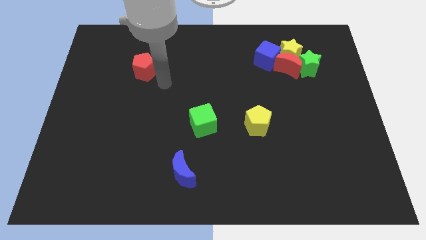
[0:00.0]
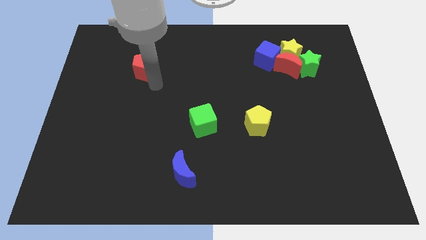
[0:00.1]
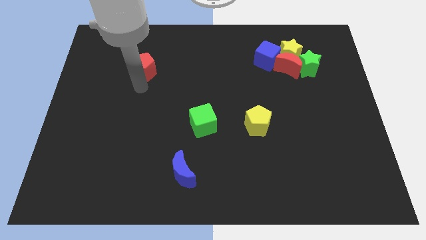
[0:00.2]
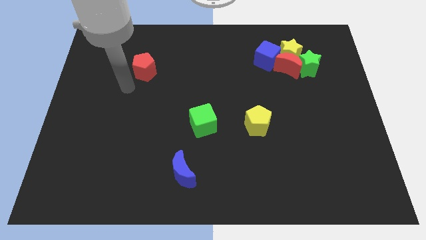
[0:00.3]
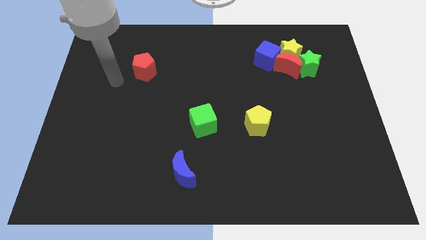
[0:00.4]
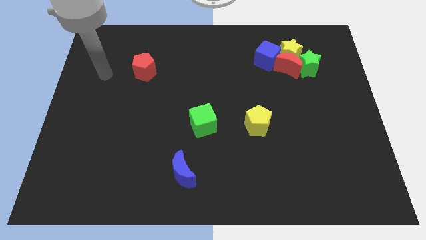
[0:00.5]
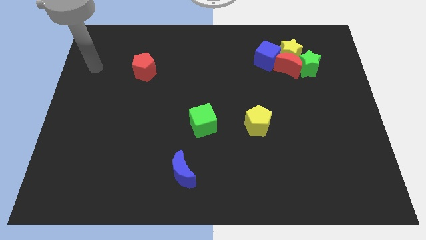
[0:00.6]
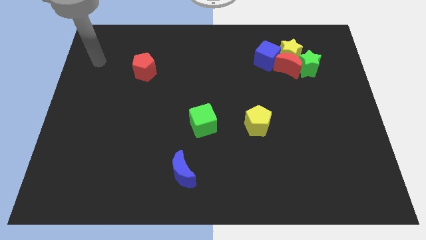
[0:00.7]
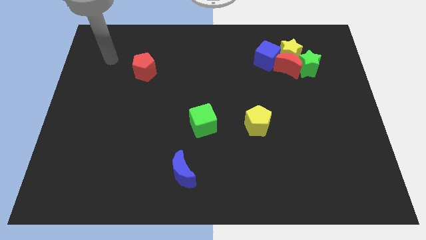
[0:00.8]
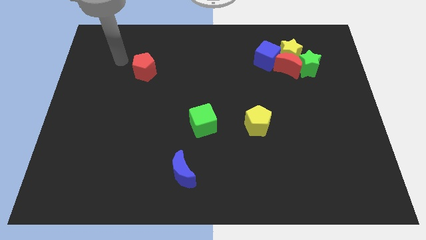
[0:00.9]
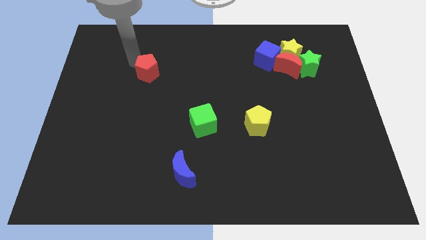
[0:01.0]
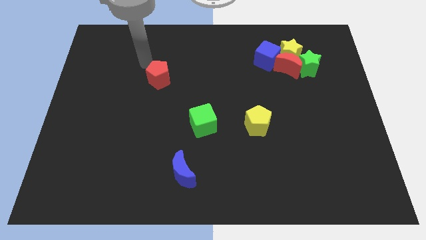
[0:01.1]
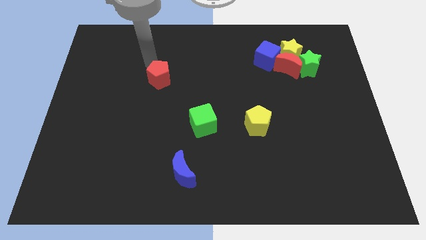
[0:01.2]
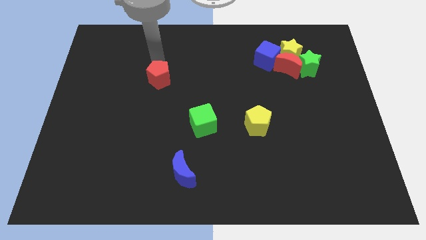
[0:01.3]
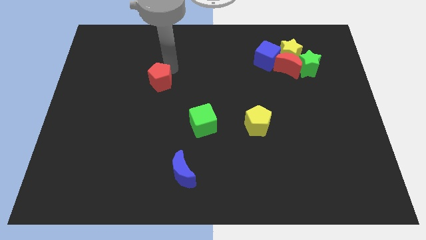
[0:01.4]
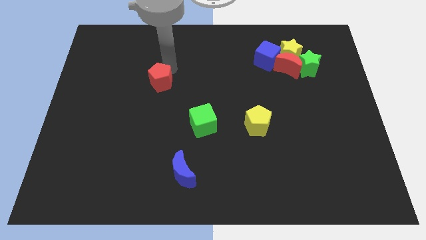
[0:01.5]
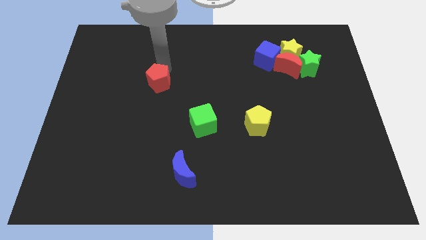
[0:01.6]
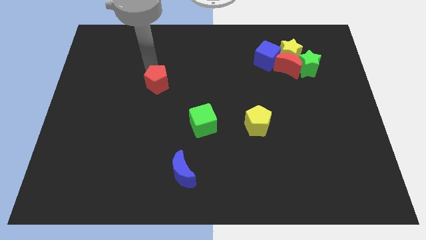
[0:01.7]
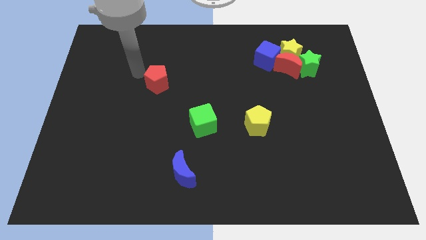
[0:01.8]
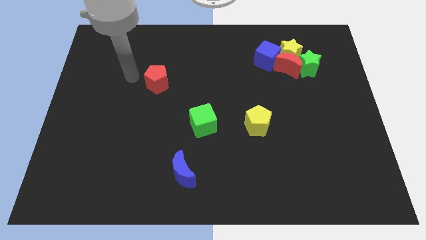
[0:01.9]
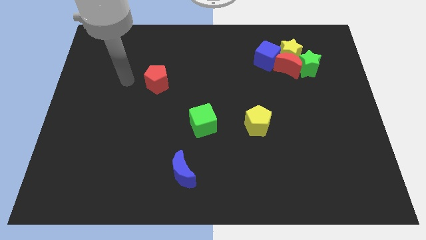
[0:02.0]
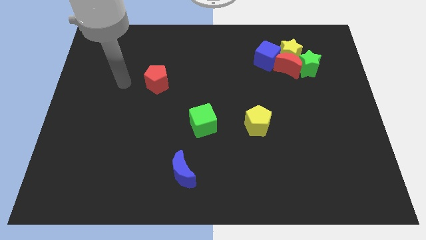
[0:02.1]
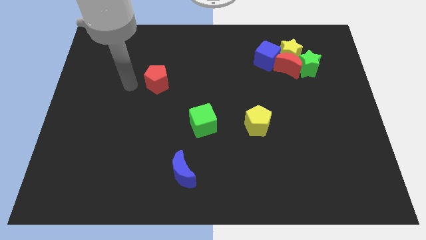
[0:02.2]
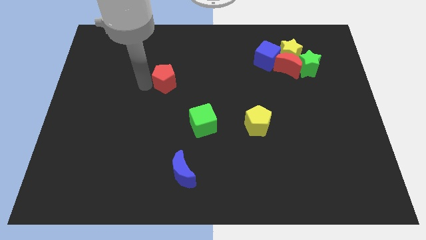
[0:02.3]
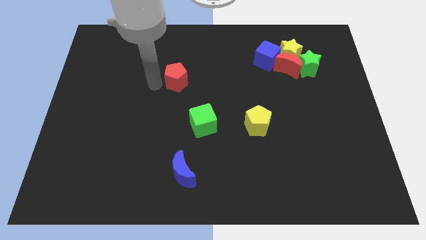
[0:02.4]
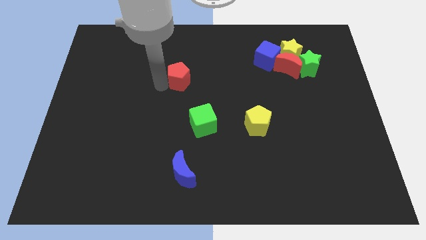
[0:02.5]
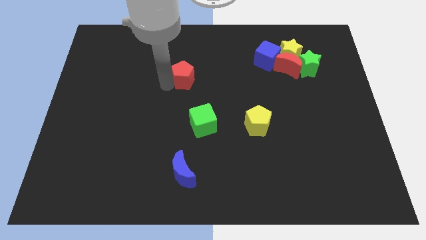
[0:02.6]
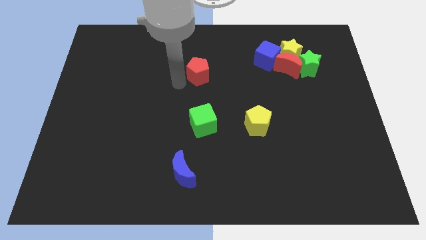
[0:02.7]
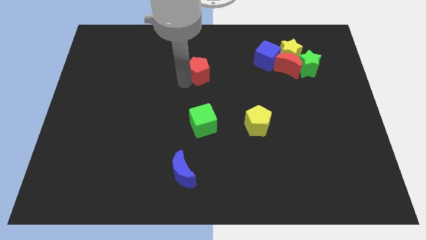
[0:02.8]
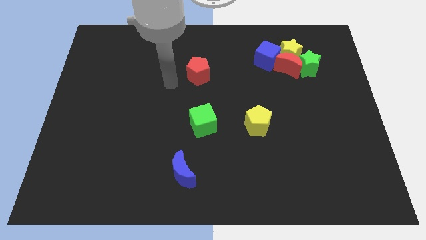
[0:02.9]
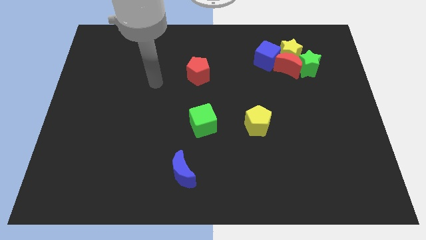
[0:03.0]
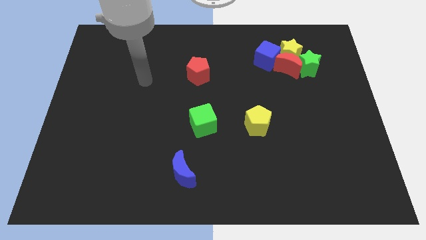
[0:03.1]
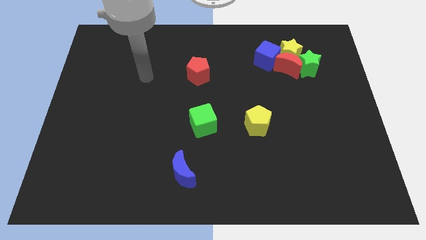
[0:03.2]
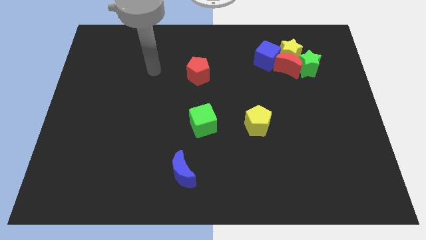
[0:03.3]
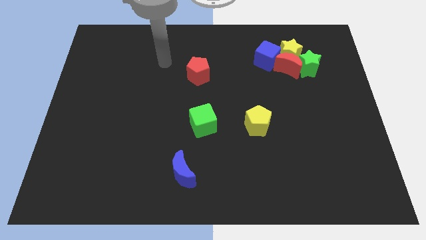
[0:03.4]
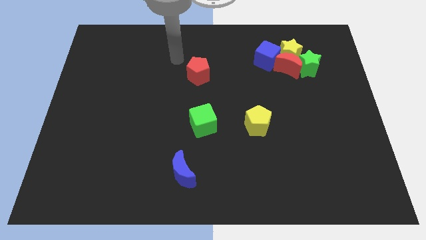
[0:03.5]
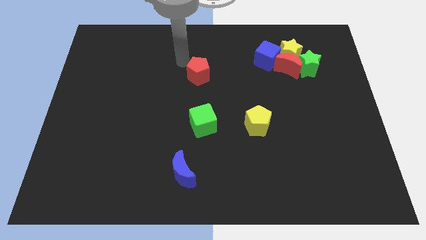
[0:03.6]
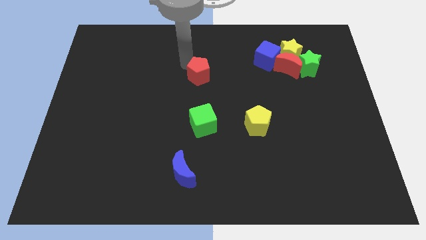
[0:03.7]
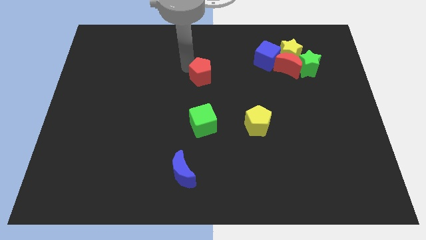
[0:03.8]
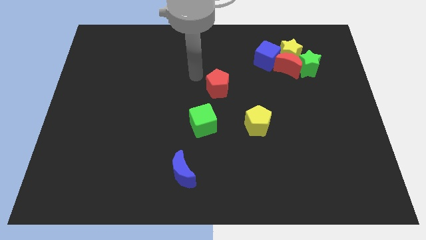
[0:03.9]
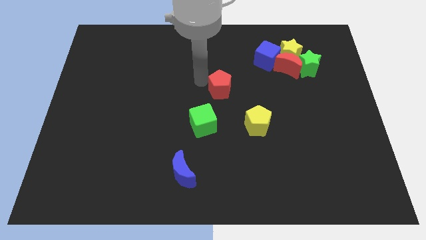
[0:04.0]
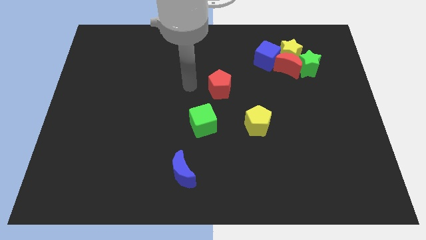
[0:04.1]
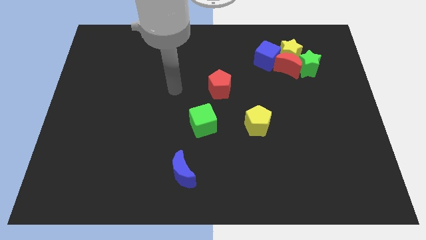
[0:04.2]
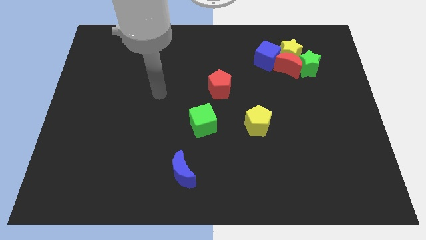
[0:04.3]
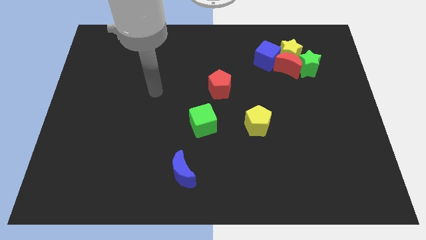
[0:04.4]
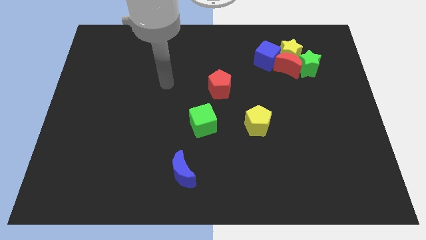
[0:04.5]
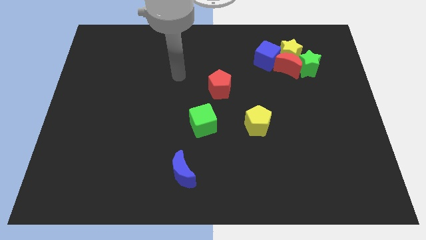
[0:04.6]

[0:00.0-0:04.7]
place the red pentagon at the top of green cube and yellow pentagon

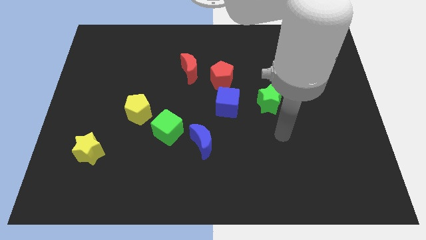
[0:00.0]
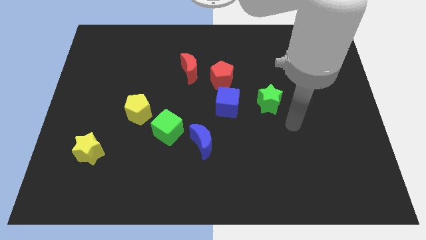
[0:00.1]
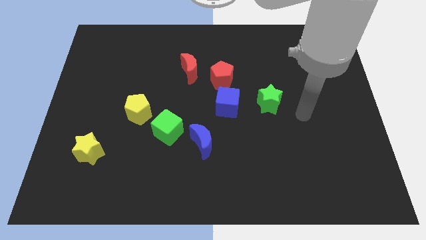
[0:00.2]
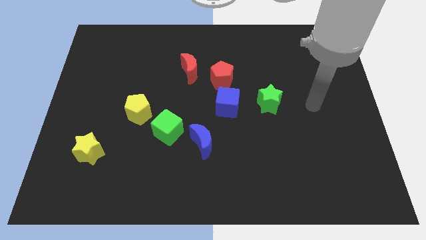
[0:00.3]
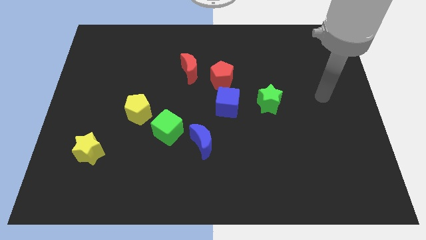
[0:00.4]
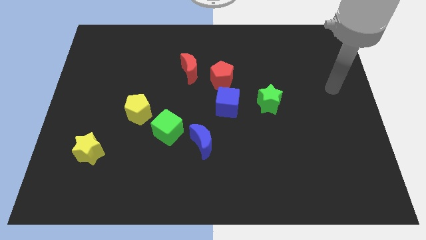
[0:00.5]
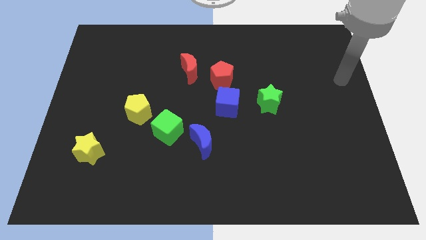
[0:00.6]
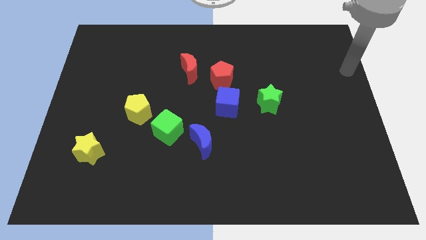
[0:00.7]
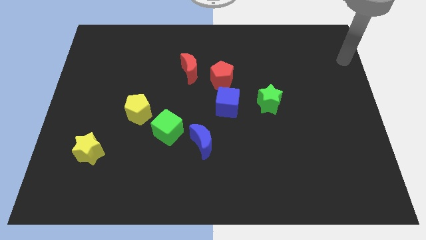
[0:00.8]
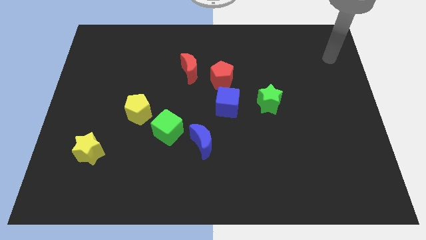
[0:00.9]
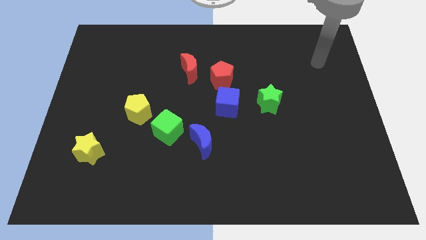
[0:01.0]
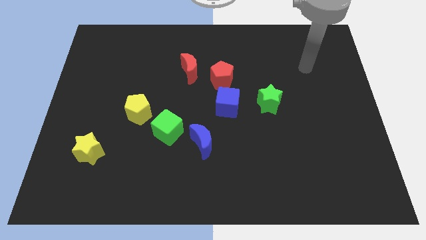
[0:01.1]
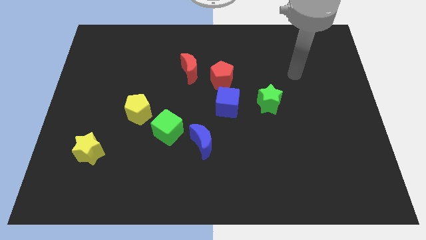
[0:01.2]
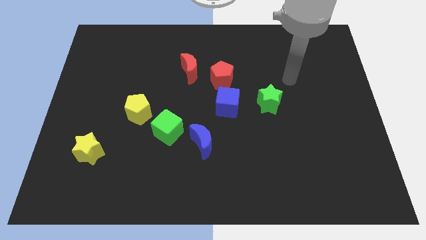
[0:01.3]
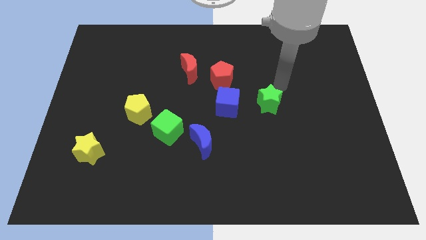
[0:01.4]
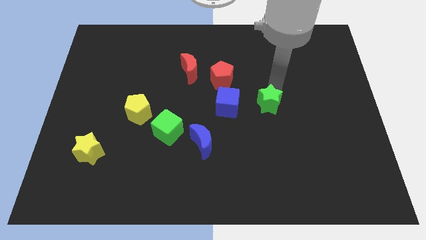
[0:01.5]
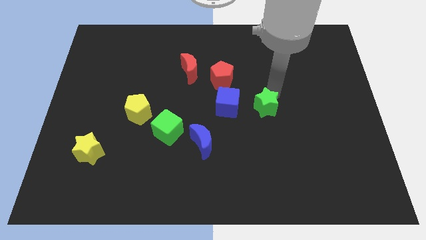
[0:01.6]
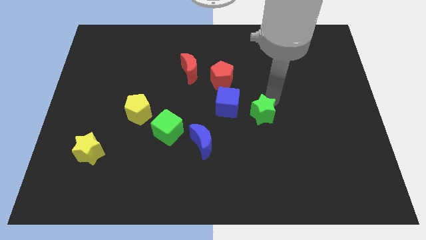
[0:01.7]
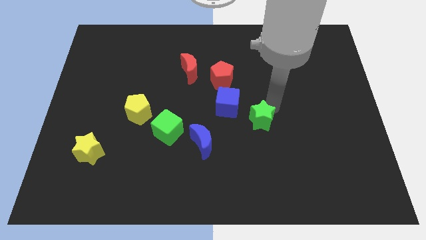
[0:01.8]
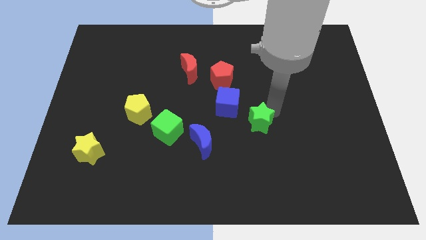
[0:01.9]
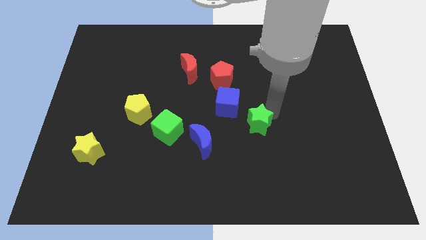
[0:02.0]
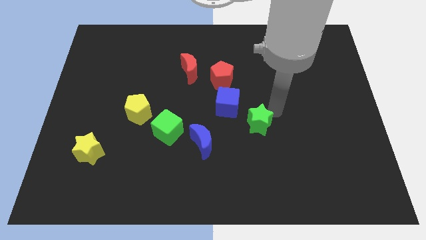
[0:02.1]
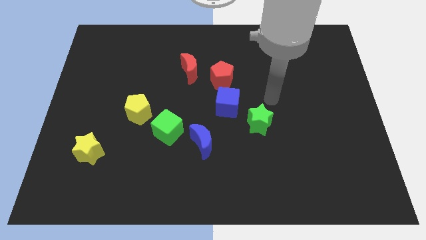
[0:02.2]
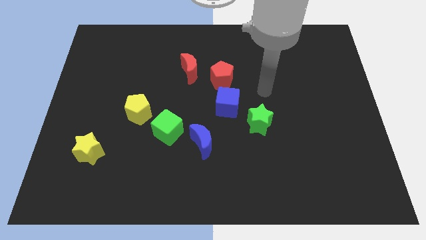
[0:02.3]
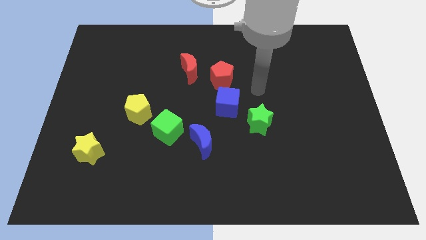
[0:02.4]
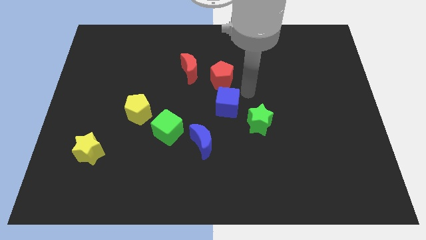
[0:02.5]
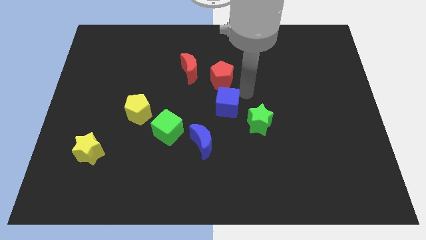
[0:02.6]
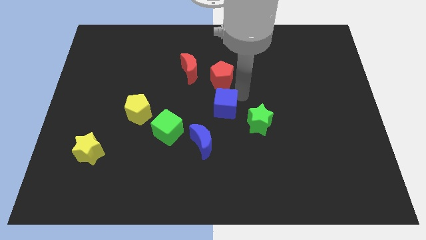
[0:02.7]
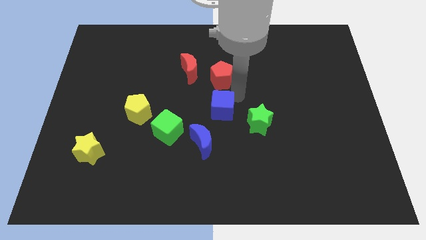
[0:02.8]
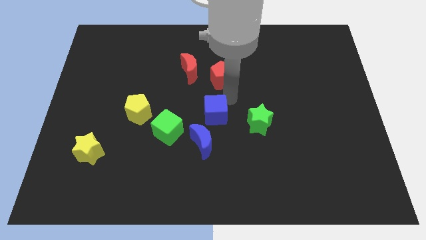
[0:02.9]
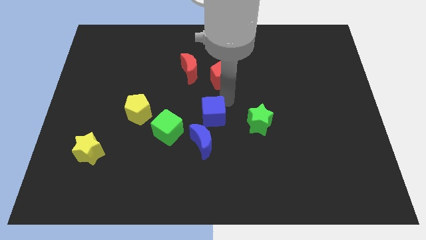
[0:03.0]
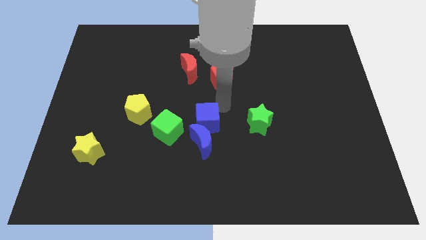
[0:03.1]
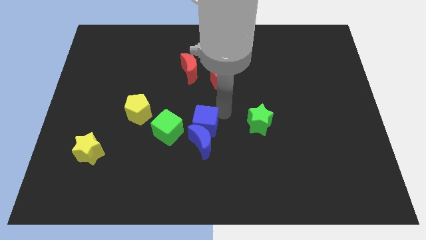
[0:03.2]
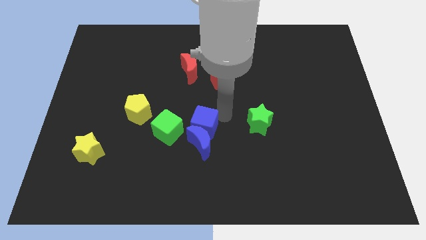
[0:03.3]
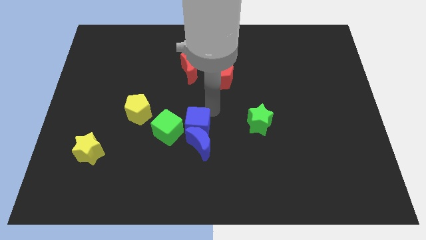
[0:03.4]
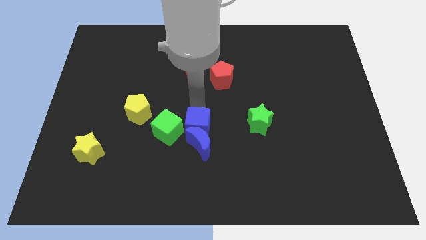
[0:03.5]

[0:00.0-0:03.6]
move blue cube to the top of blue moon

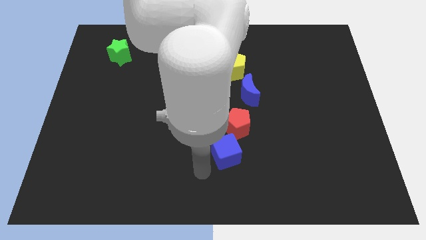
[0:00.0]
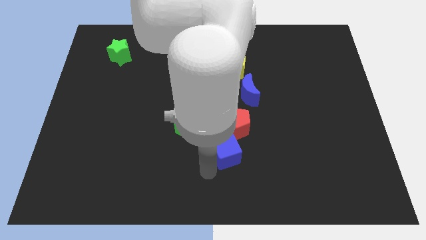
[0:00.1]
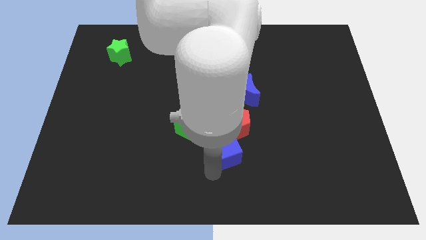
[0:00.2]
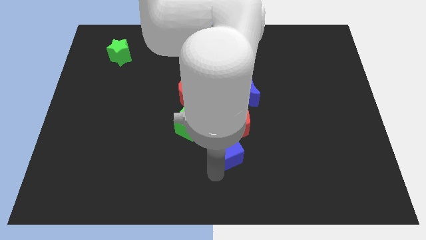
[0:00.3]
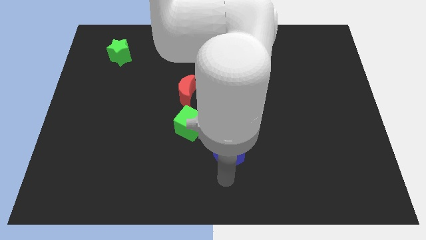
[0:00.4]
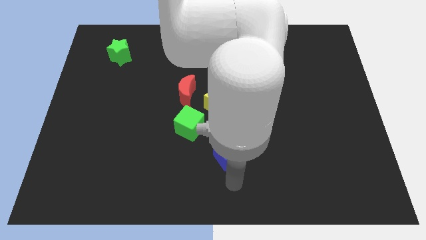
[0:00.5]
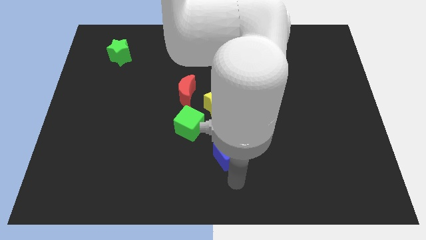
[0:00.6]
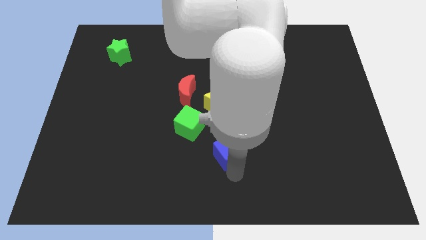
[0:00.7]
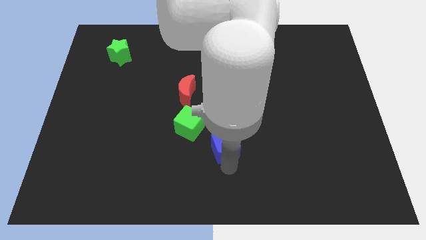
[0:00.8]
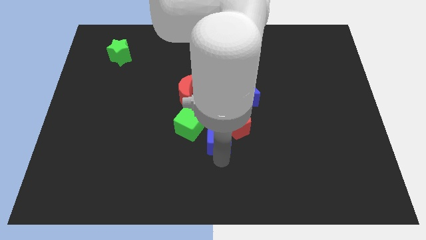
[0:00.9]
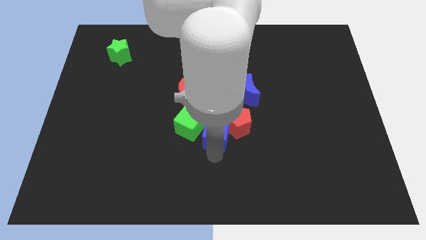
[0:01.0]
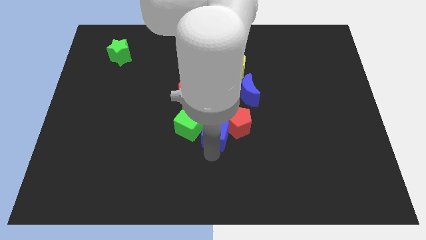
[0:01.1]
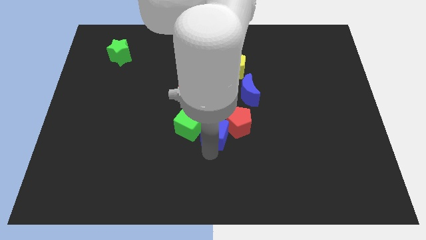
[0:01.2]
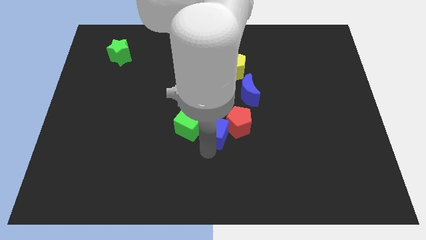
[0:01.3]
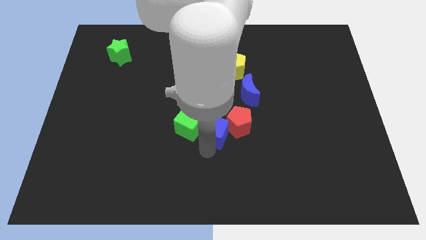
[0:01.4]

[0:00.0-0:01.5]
move the blue cube into the green cube and the red pentagon
